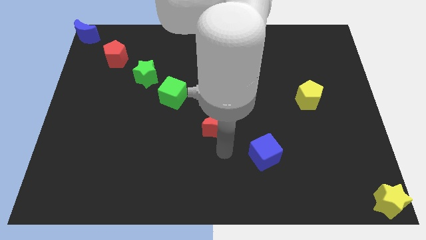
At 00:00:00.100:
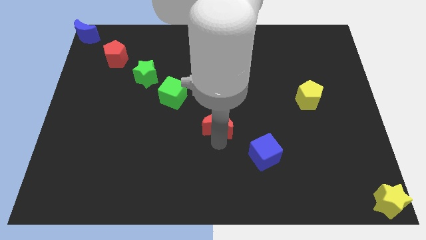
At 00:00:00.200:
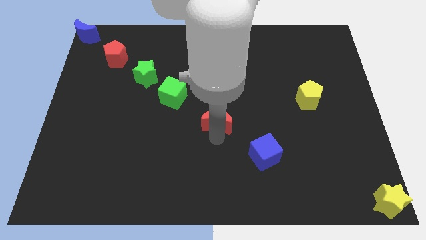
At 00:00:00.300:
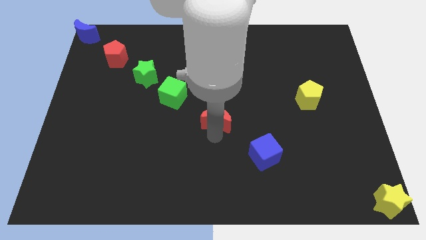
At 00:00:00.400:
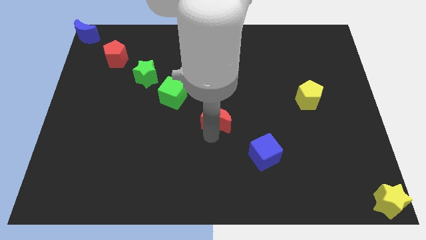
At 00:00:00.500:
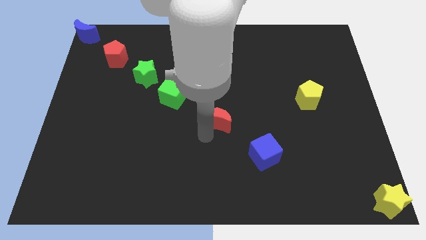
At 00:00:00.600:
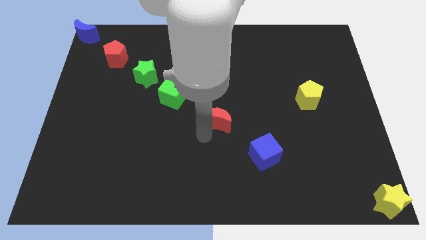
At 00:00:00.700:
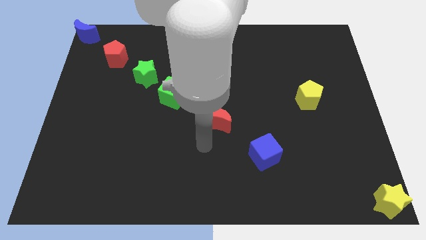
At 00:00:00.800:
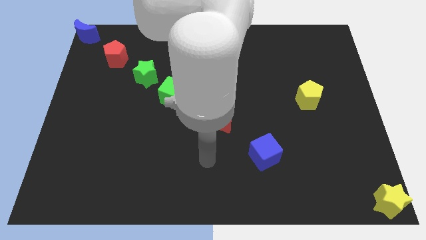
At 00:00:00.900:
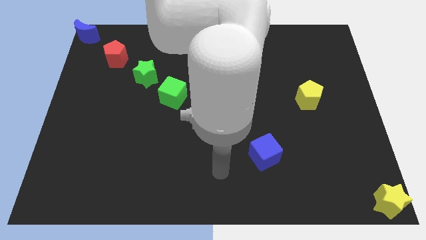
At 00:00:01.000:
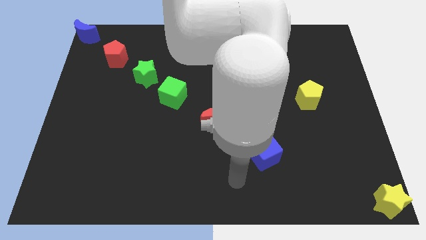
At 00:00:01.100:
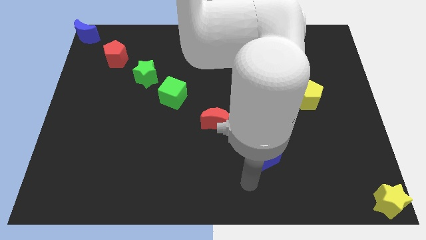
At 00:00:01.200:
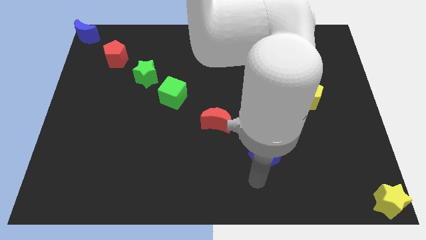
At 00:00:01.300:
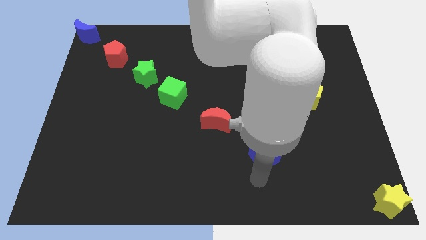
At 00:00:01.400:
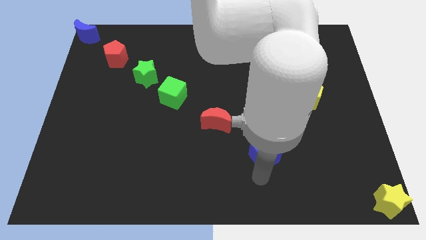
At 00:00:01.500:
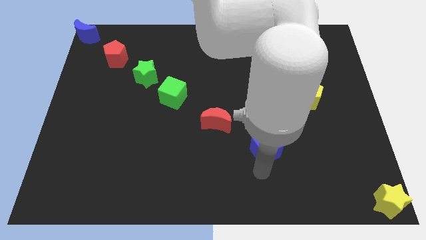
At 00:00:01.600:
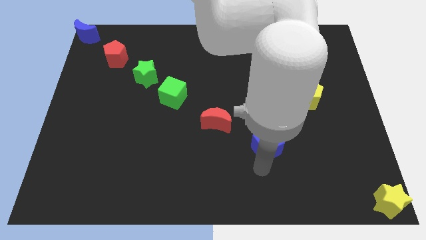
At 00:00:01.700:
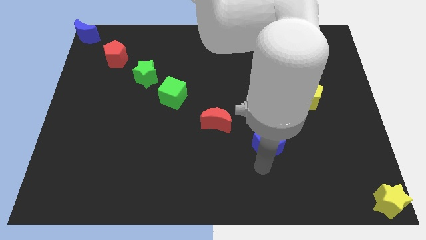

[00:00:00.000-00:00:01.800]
place red crescent and blue cube diagonally in a line

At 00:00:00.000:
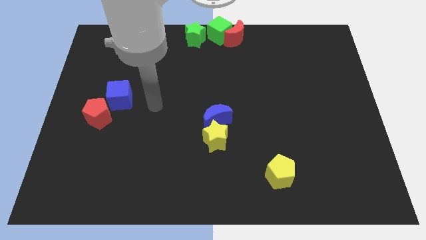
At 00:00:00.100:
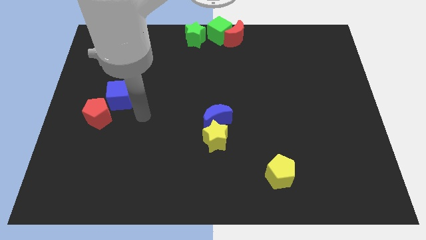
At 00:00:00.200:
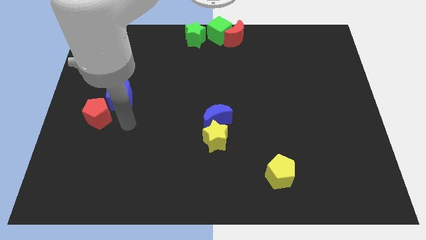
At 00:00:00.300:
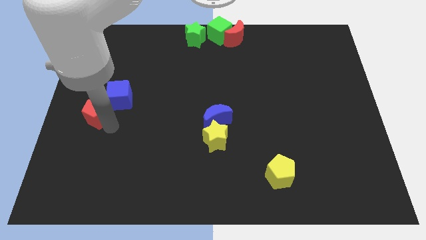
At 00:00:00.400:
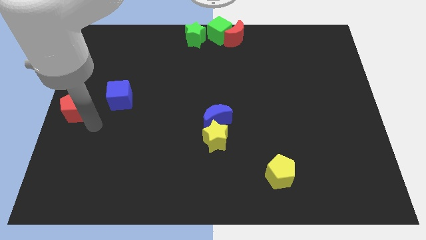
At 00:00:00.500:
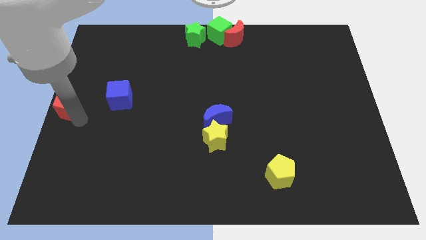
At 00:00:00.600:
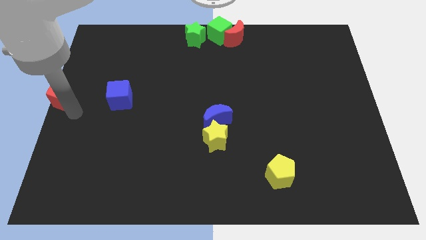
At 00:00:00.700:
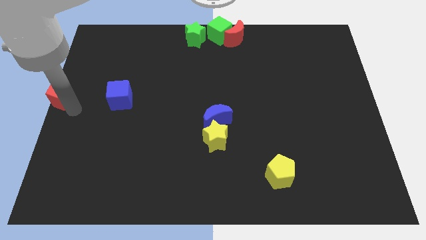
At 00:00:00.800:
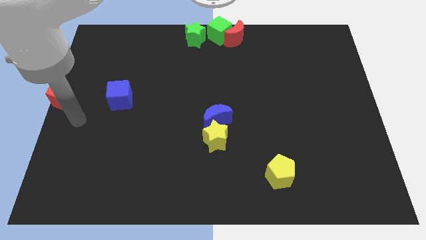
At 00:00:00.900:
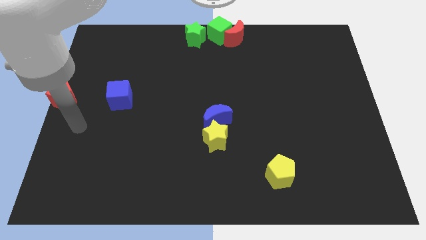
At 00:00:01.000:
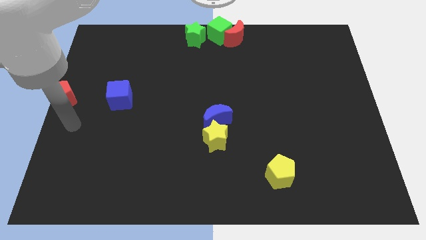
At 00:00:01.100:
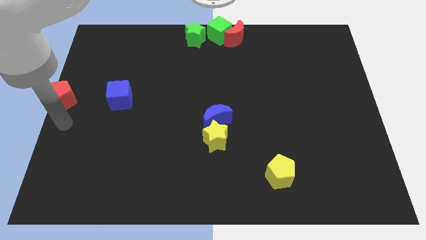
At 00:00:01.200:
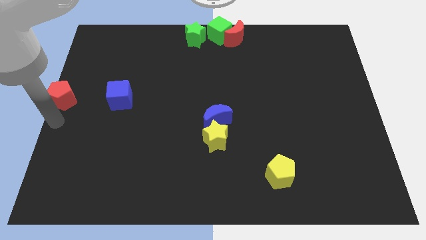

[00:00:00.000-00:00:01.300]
move the red pentagon to the center left

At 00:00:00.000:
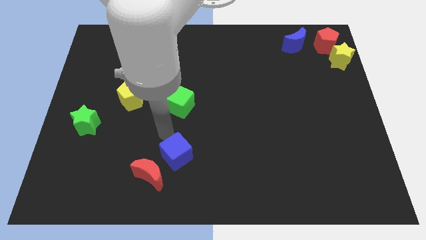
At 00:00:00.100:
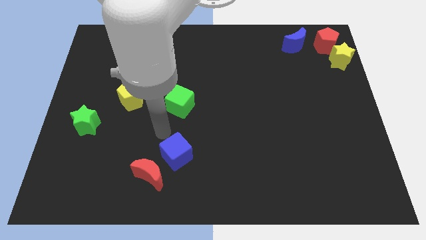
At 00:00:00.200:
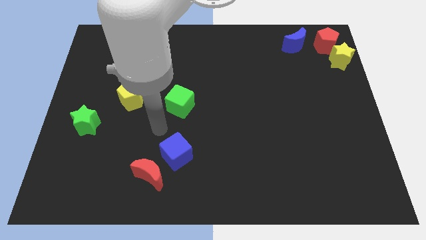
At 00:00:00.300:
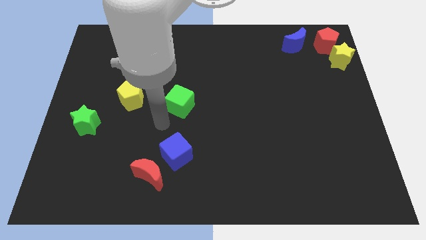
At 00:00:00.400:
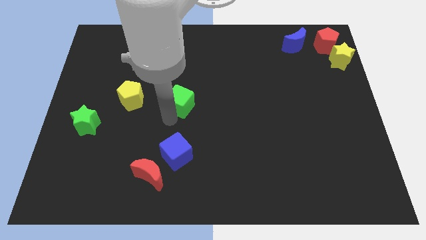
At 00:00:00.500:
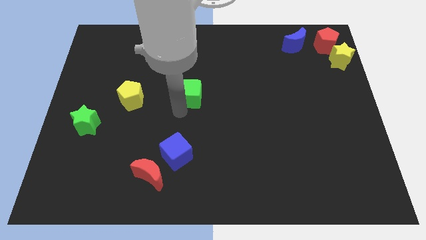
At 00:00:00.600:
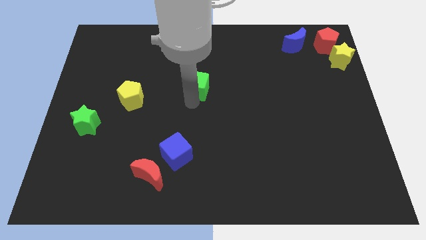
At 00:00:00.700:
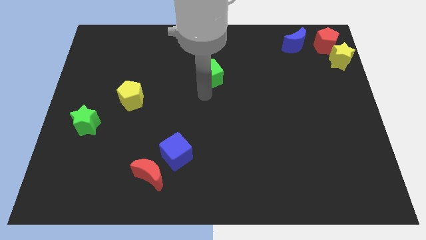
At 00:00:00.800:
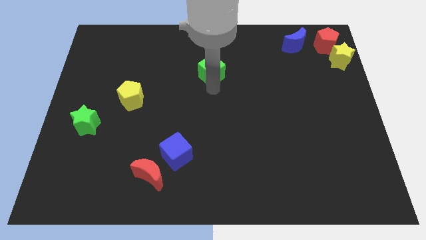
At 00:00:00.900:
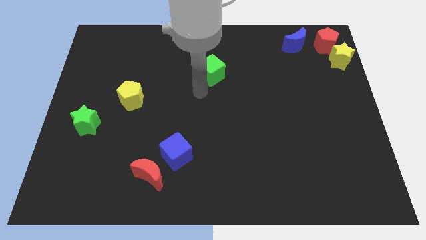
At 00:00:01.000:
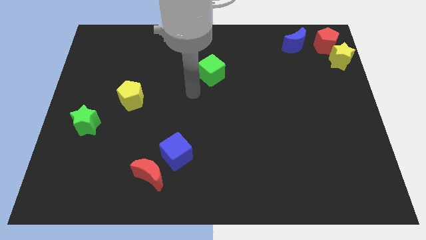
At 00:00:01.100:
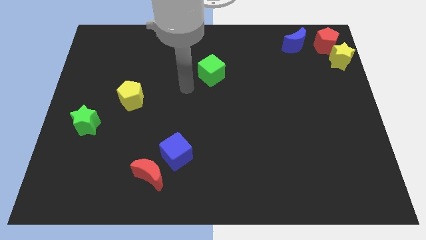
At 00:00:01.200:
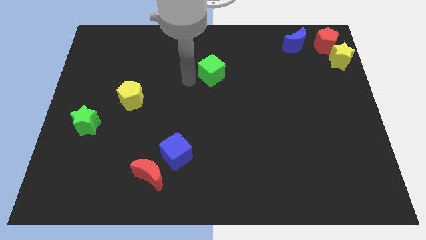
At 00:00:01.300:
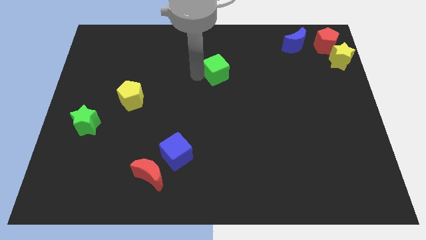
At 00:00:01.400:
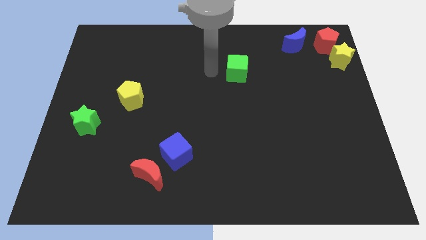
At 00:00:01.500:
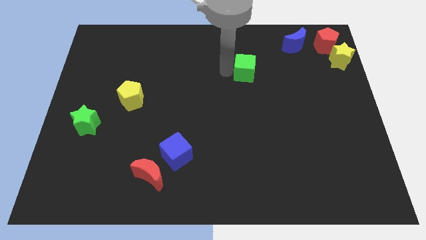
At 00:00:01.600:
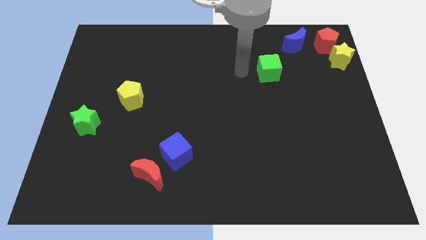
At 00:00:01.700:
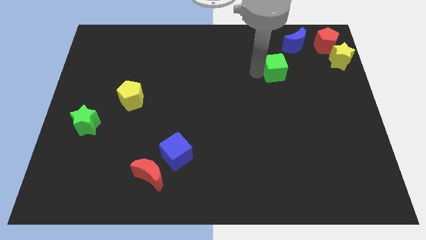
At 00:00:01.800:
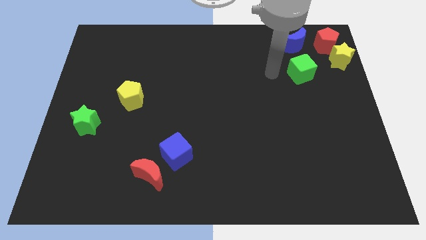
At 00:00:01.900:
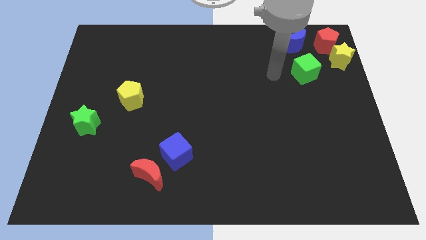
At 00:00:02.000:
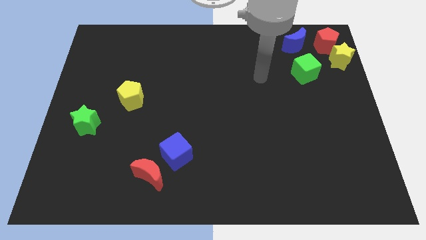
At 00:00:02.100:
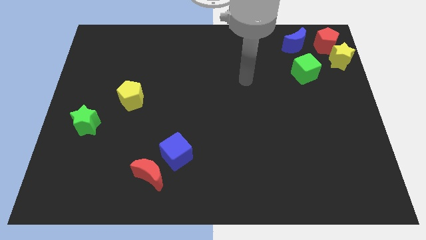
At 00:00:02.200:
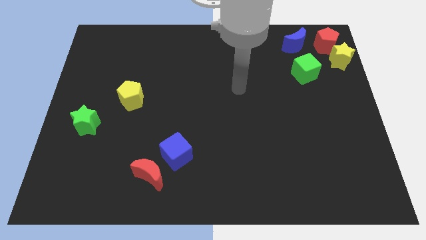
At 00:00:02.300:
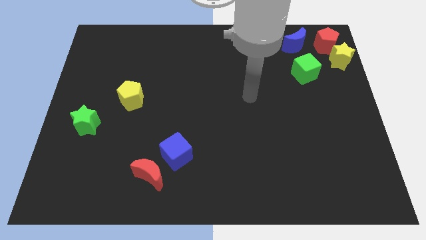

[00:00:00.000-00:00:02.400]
push the green cube towards the top right corner of the board

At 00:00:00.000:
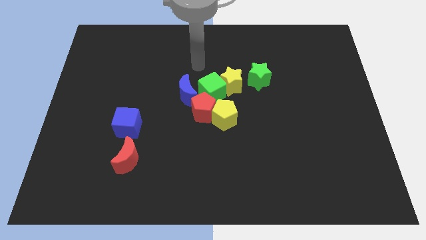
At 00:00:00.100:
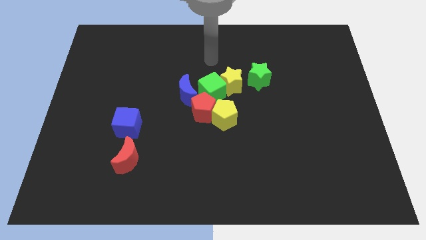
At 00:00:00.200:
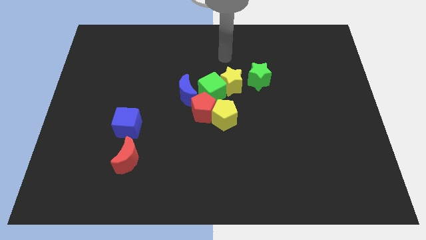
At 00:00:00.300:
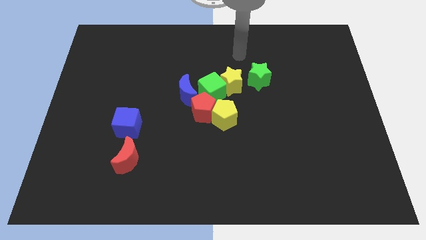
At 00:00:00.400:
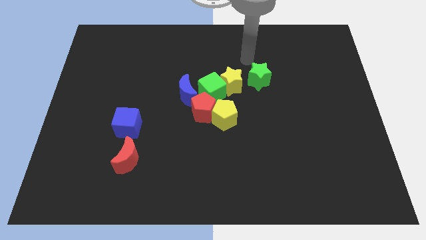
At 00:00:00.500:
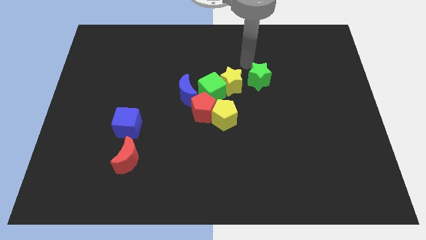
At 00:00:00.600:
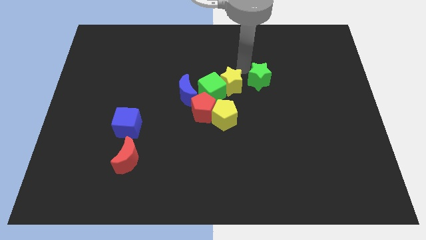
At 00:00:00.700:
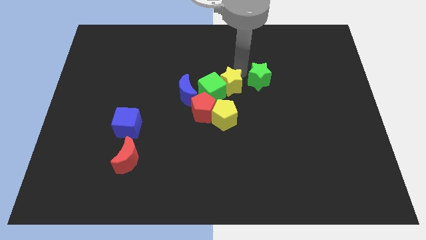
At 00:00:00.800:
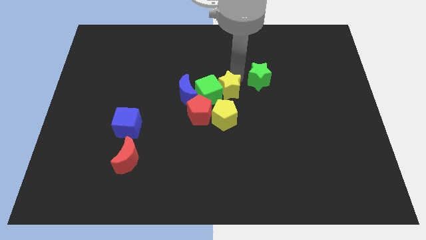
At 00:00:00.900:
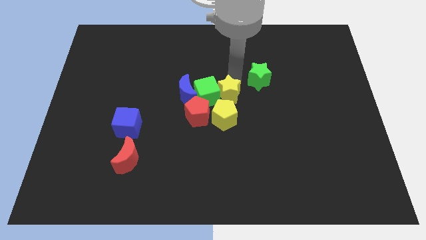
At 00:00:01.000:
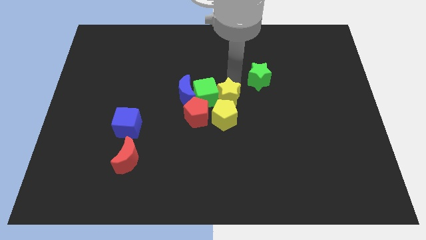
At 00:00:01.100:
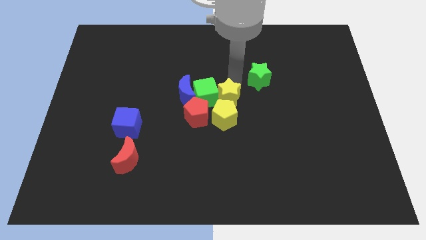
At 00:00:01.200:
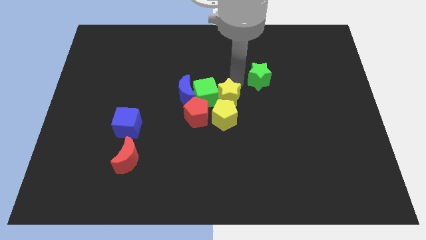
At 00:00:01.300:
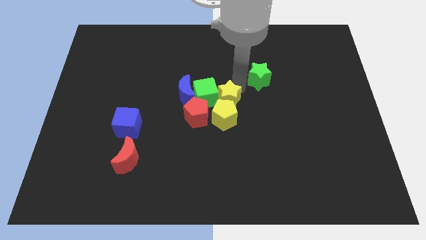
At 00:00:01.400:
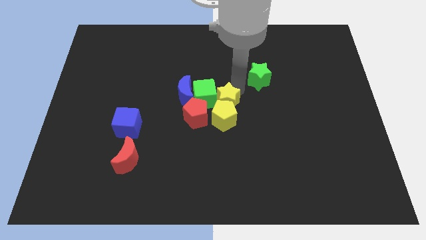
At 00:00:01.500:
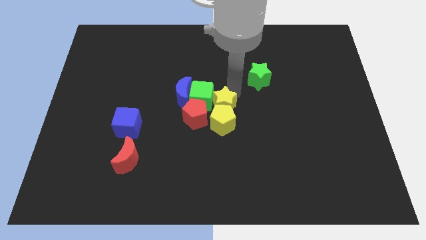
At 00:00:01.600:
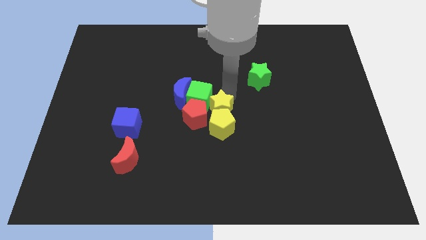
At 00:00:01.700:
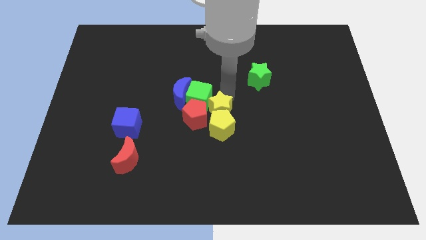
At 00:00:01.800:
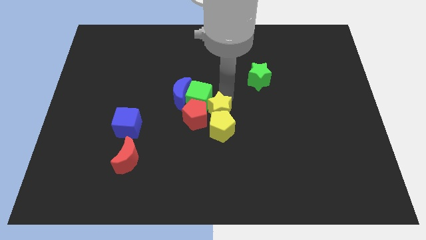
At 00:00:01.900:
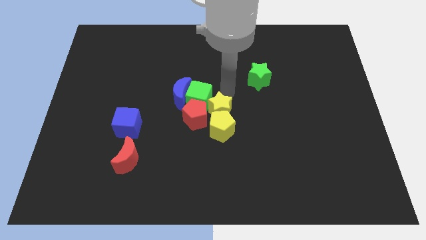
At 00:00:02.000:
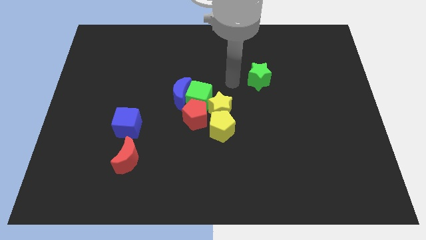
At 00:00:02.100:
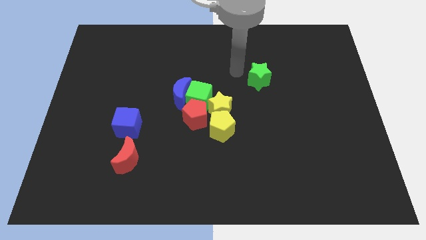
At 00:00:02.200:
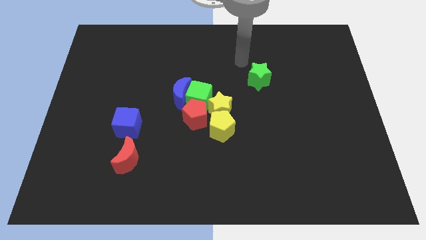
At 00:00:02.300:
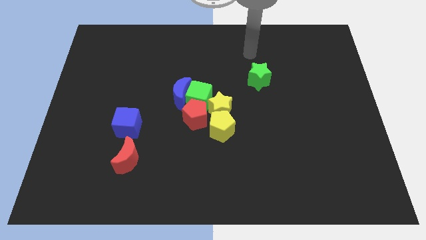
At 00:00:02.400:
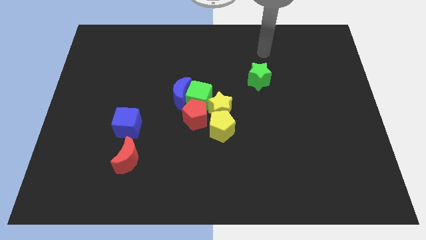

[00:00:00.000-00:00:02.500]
push the yellow star to the top of the yellow pentagon

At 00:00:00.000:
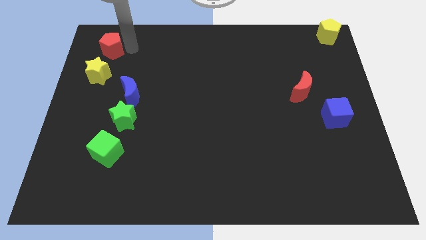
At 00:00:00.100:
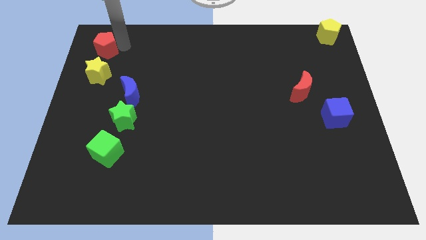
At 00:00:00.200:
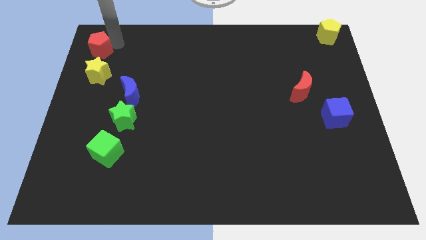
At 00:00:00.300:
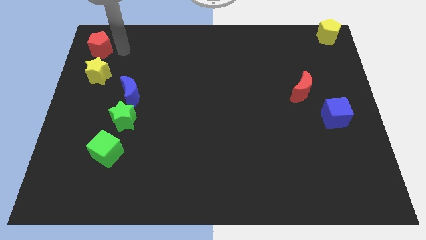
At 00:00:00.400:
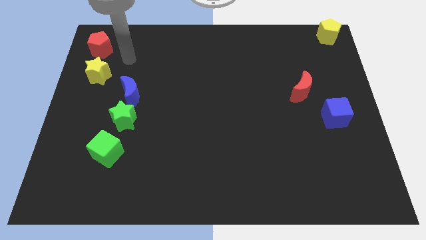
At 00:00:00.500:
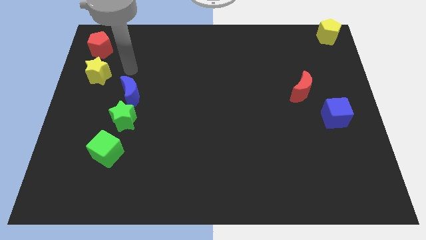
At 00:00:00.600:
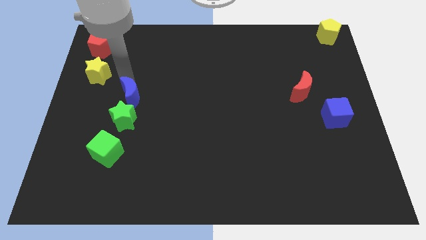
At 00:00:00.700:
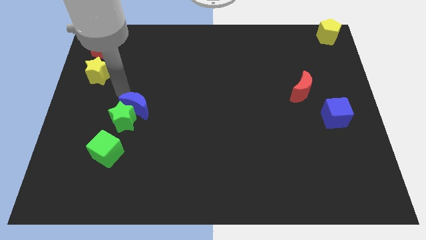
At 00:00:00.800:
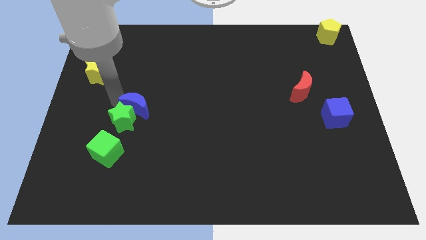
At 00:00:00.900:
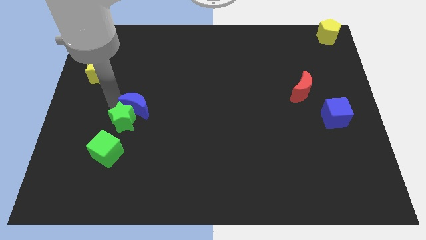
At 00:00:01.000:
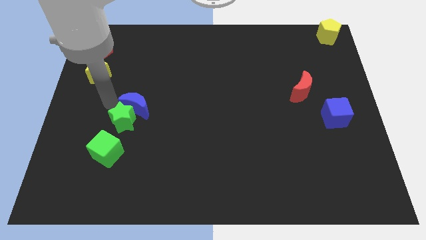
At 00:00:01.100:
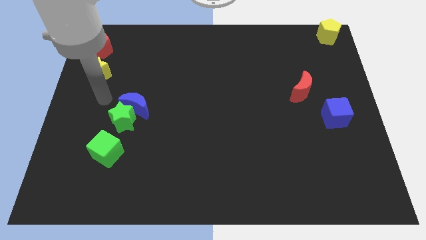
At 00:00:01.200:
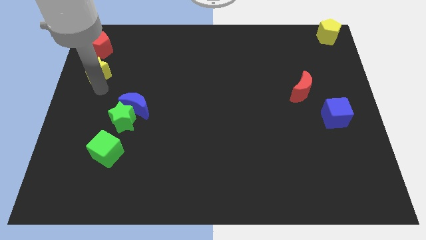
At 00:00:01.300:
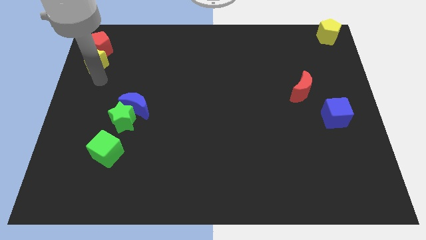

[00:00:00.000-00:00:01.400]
push the blue moon into the green star
